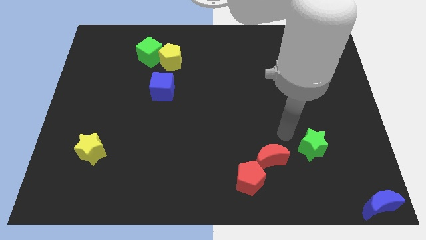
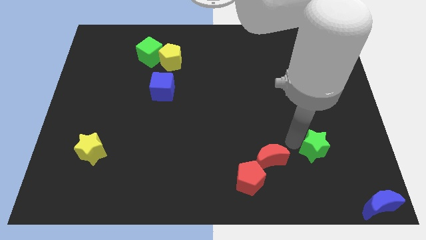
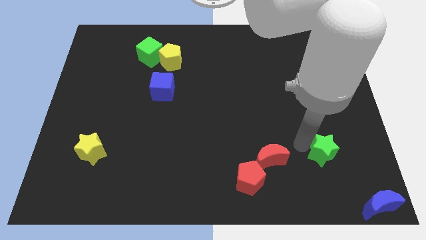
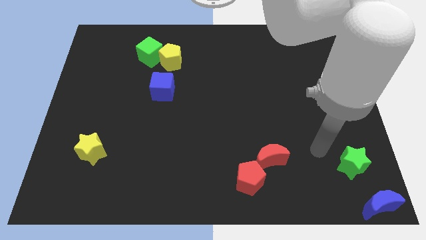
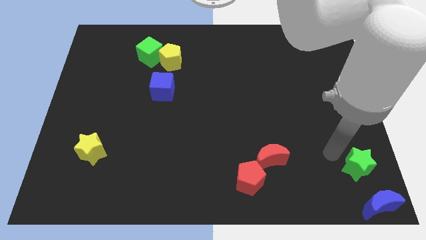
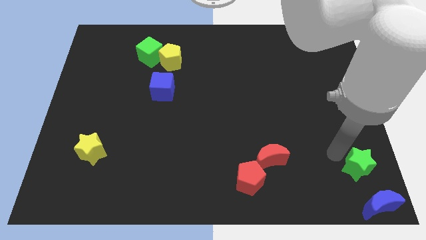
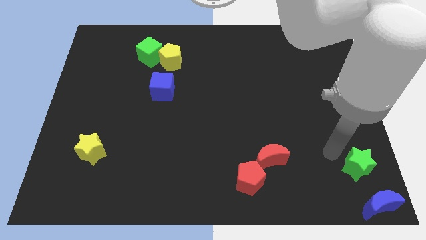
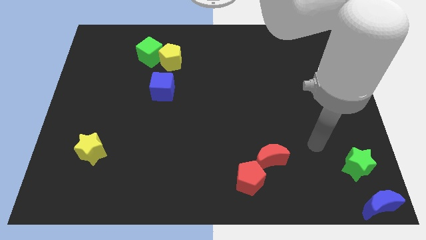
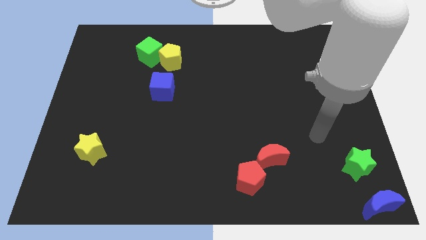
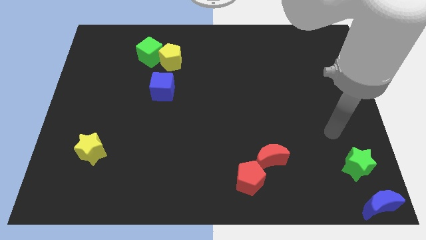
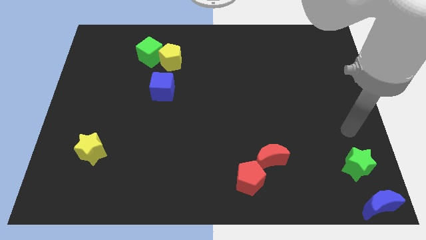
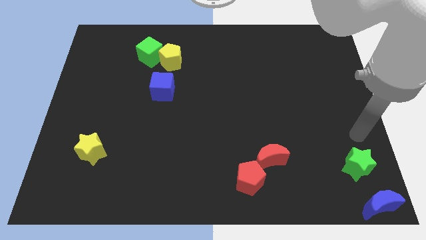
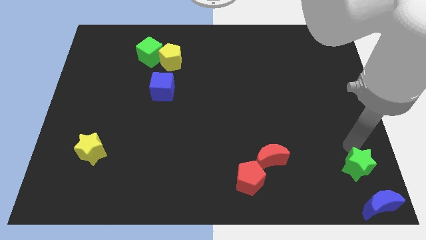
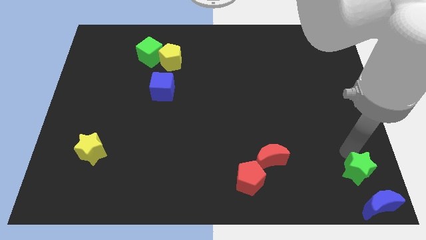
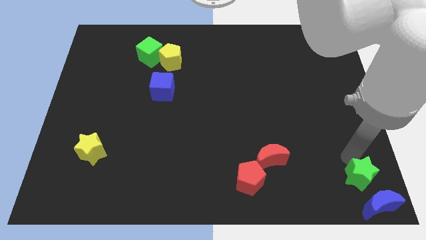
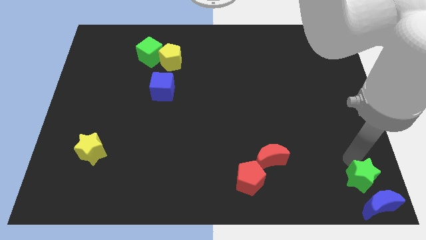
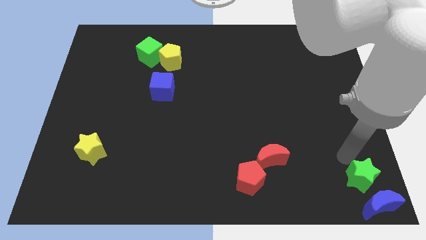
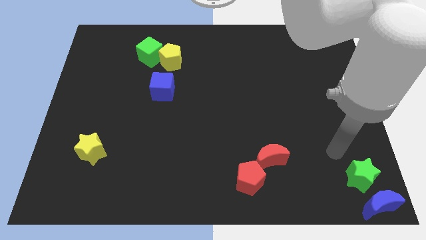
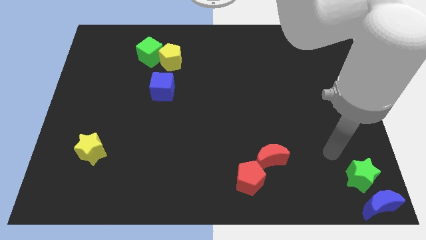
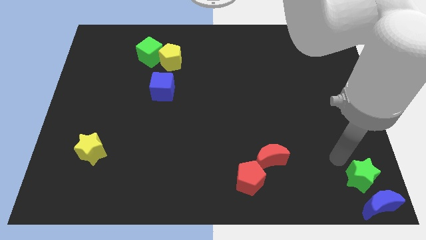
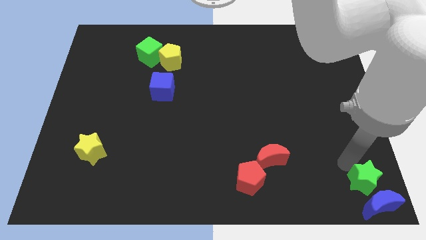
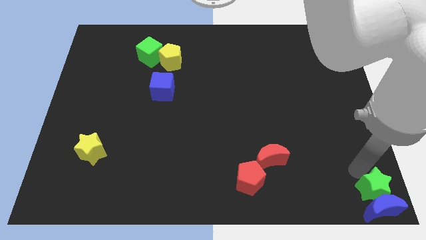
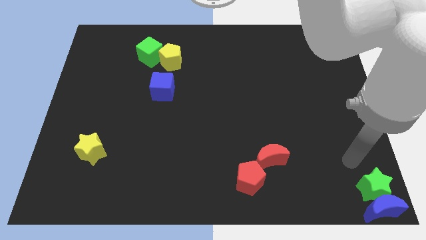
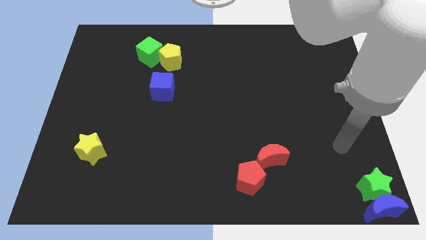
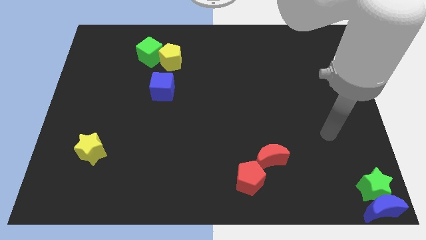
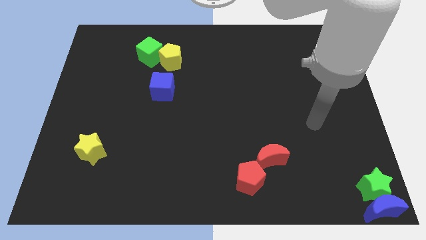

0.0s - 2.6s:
make the green star to touch the top side of the blue crescent

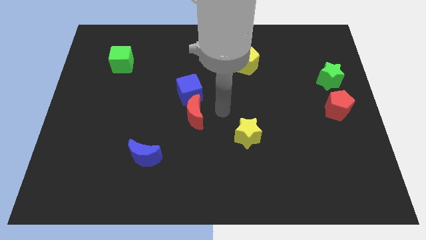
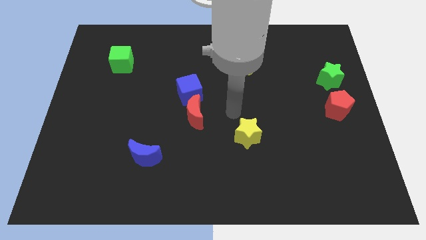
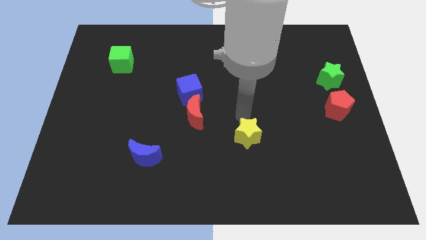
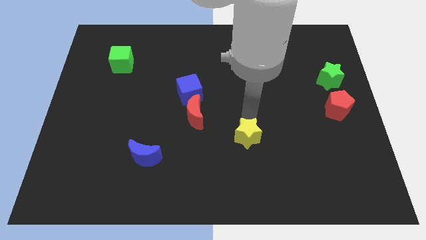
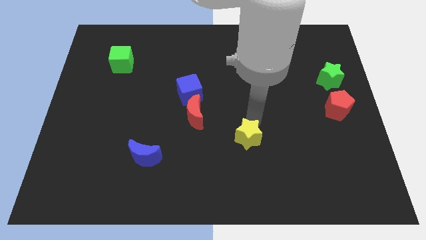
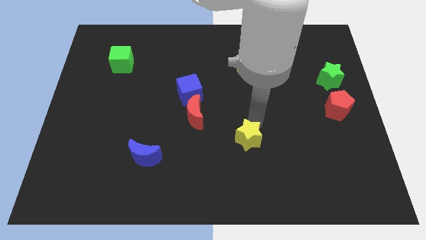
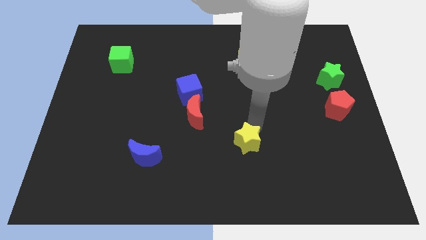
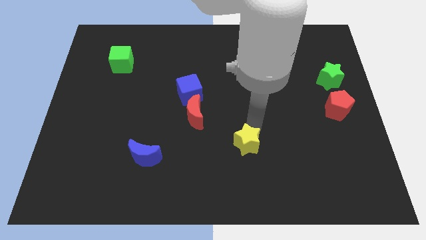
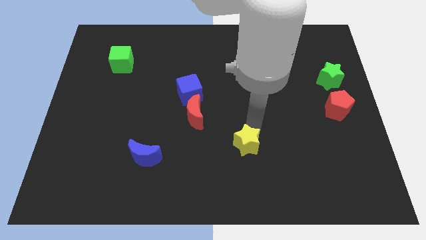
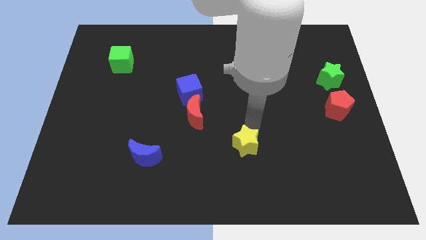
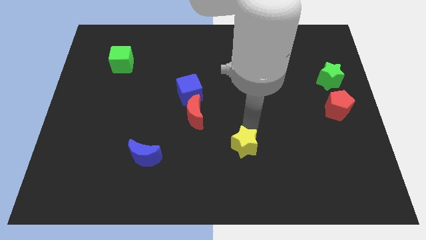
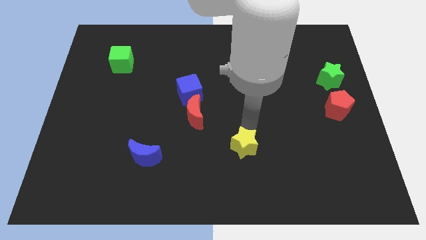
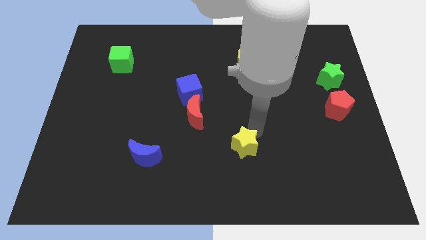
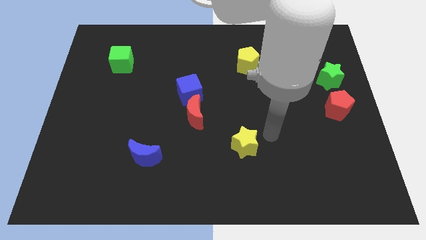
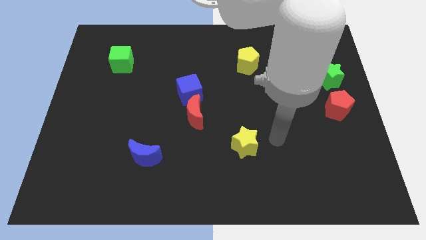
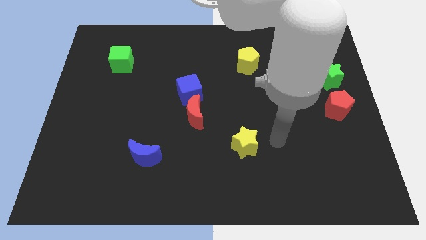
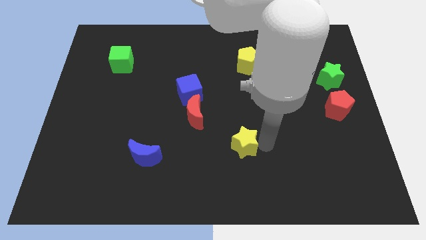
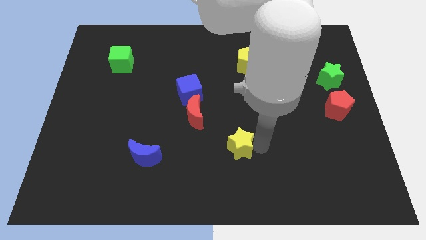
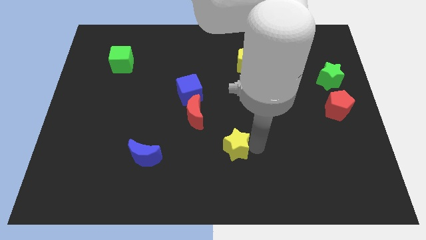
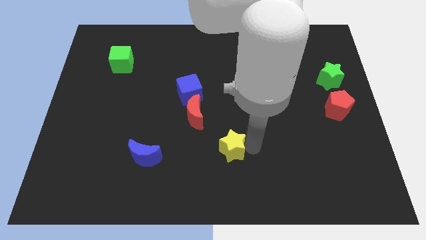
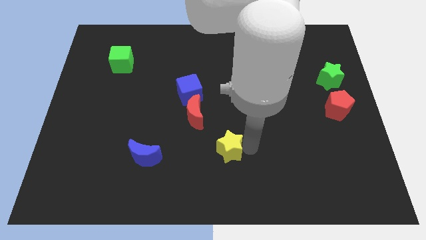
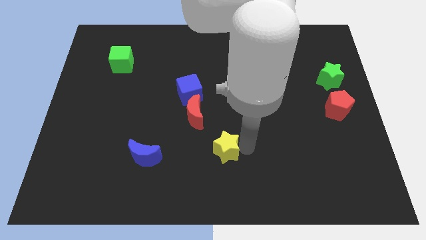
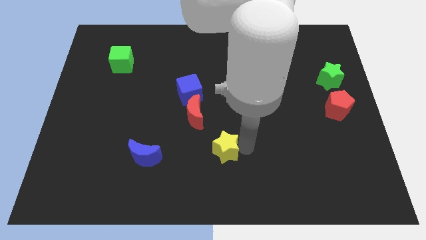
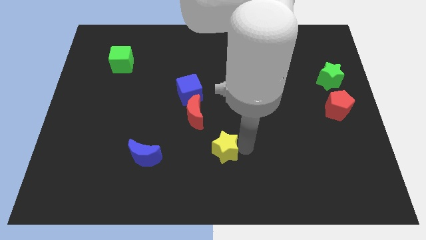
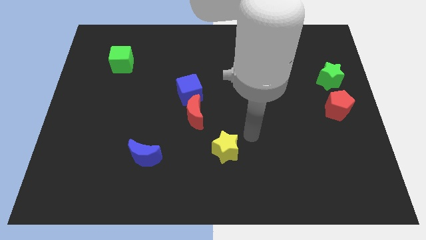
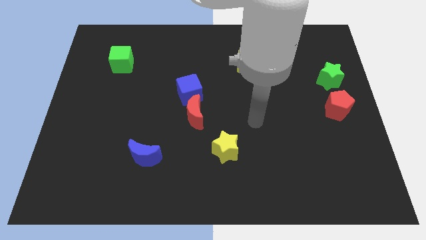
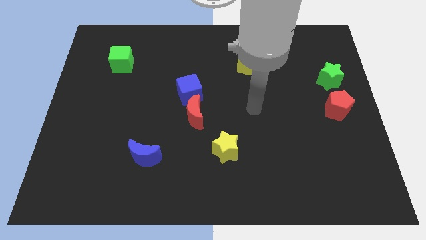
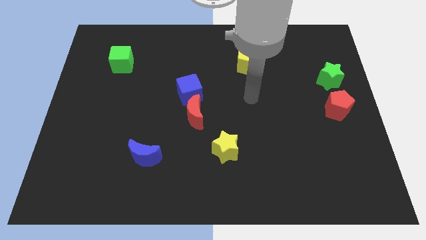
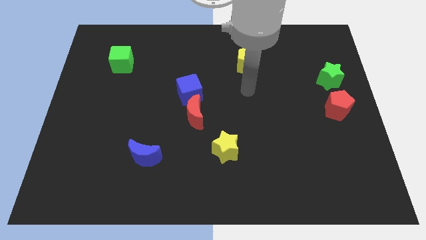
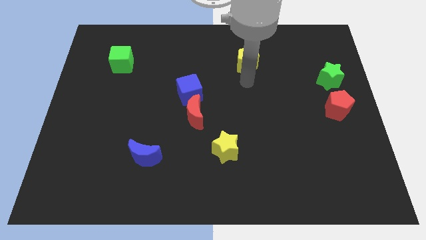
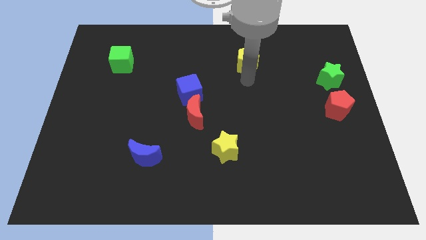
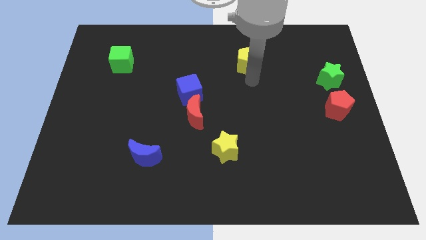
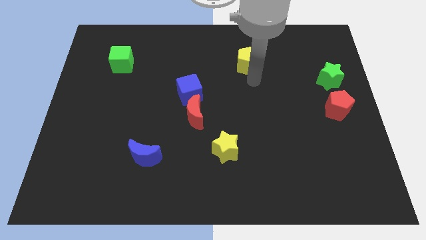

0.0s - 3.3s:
push the yellow star diagonally on the bottom right side of the red moon

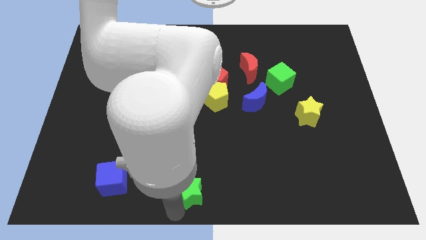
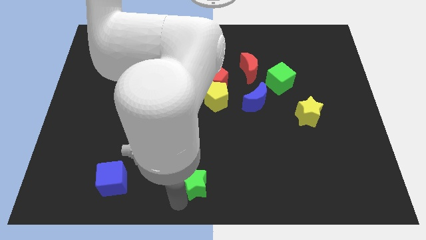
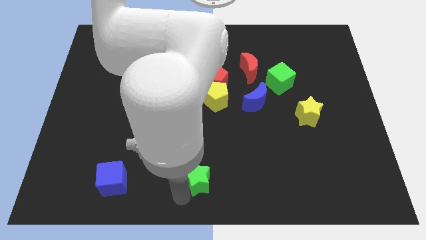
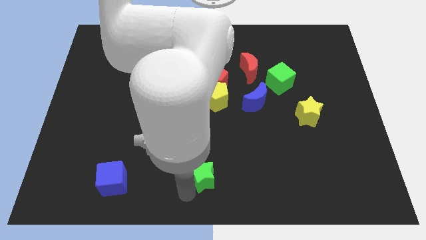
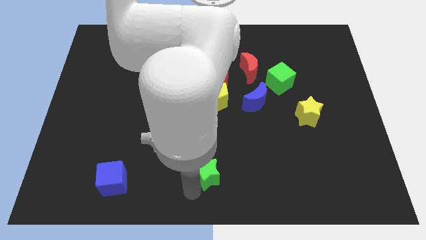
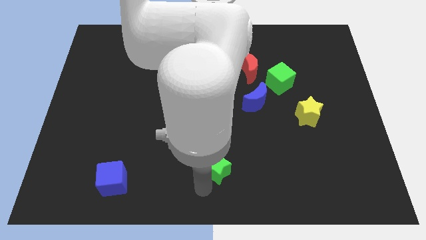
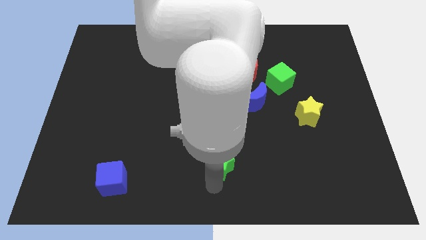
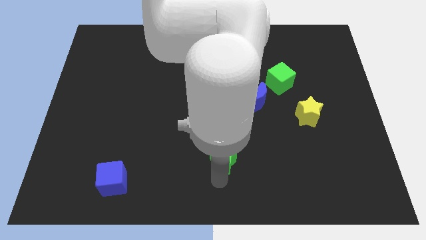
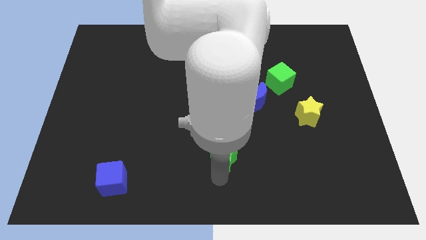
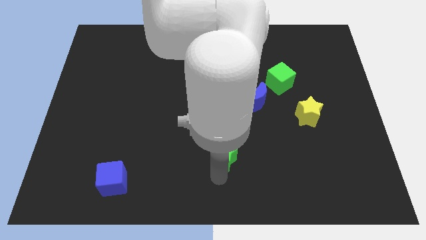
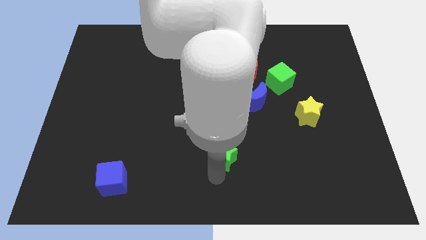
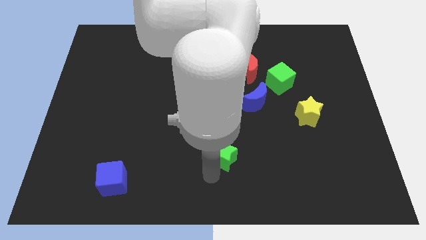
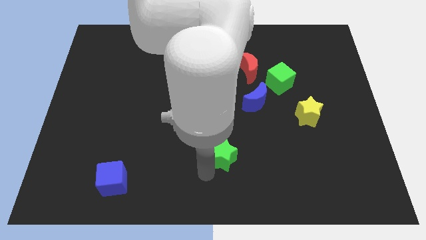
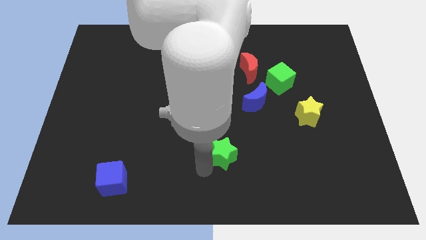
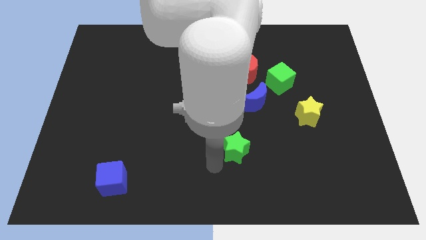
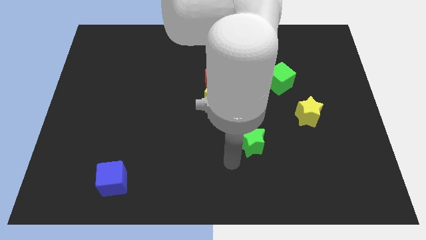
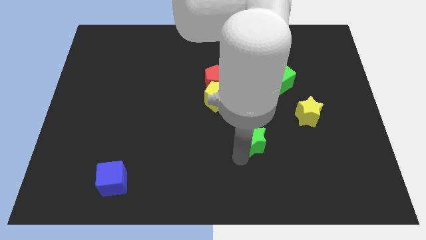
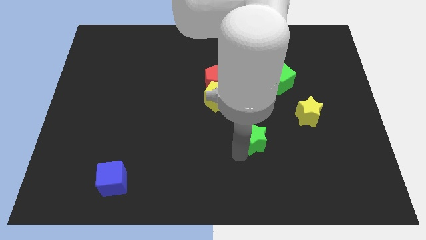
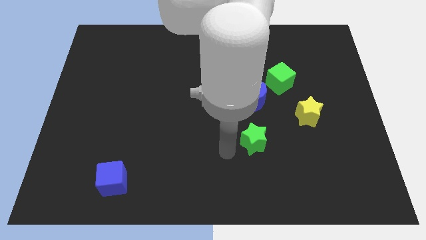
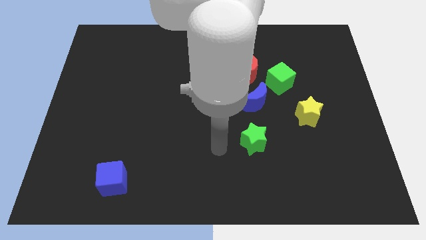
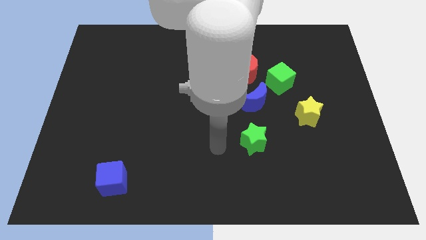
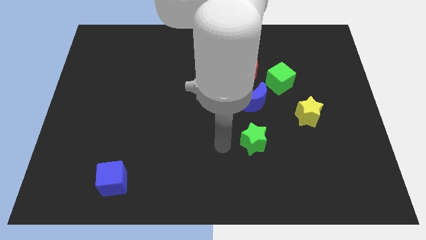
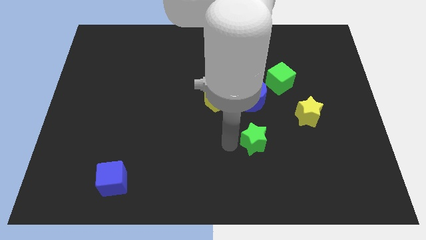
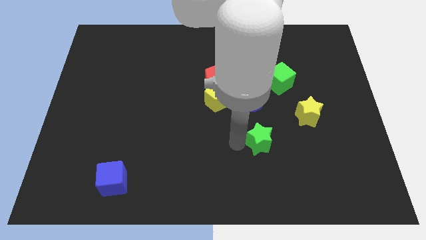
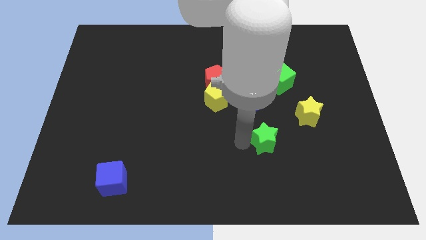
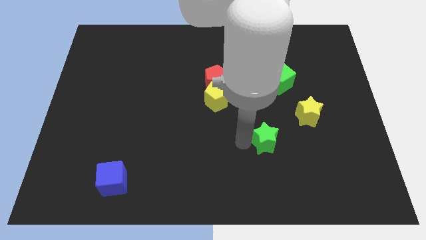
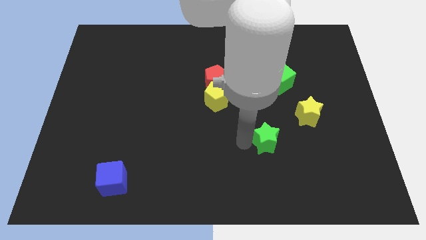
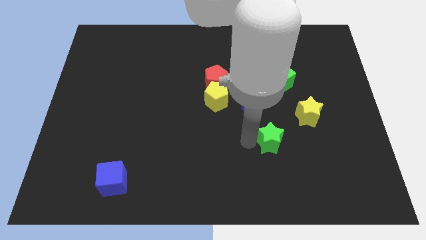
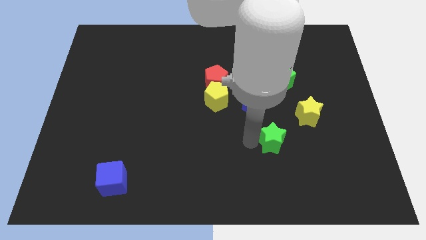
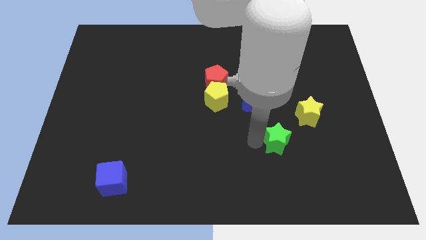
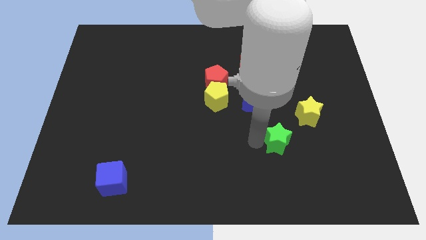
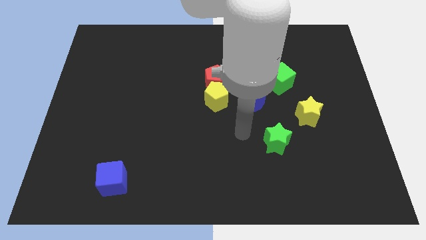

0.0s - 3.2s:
push the green star diagonally to the bottom left of the yellow star
